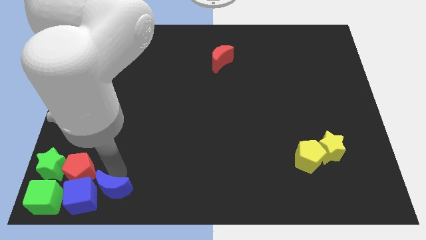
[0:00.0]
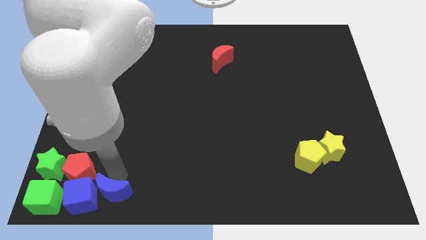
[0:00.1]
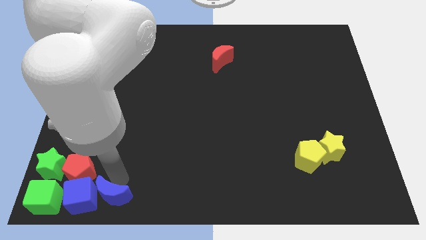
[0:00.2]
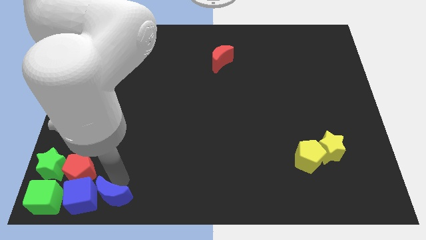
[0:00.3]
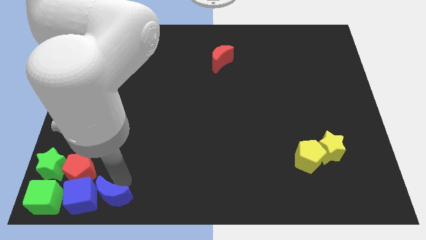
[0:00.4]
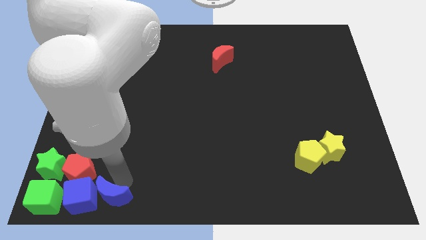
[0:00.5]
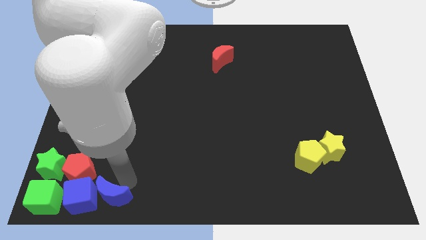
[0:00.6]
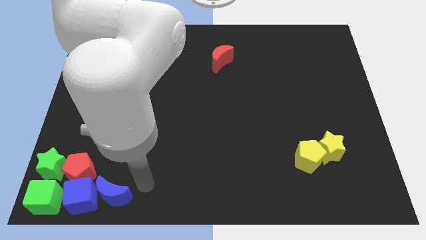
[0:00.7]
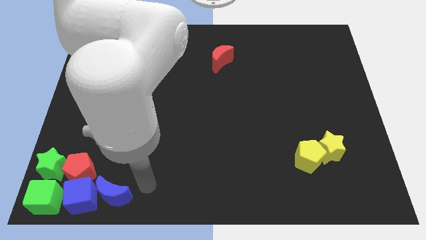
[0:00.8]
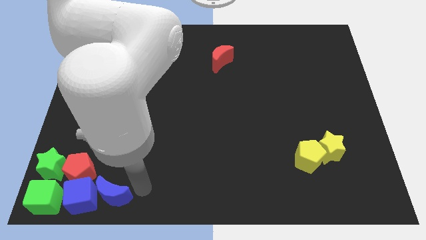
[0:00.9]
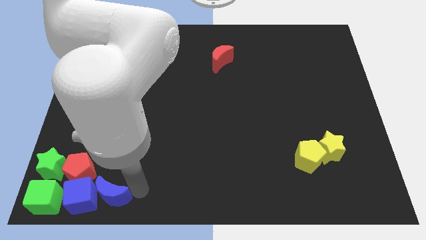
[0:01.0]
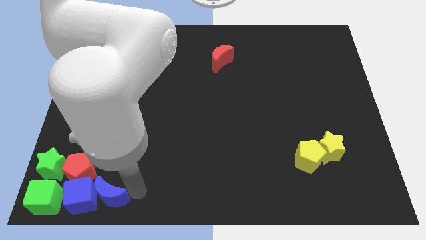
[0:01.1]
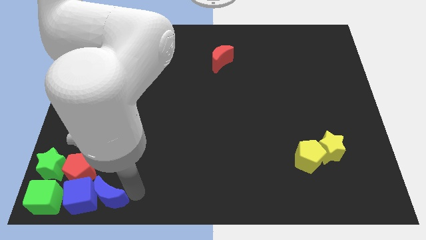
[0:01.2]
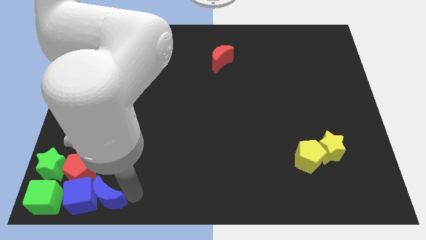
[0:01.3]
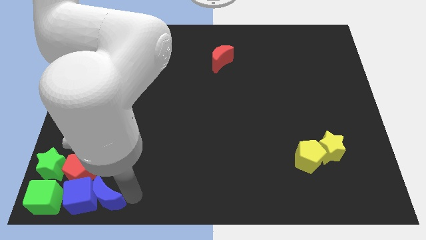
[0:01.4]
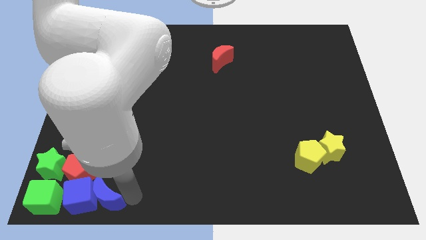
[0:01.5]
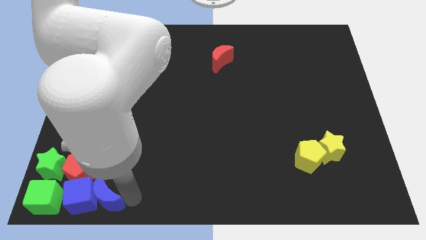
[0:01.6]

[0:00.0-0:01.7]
move the blue crescent to the right side of the blue cube

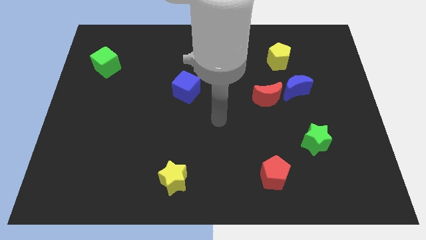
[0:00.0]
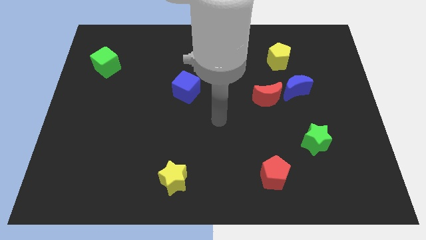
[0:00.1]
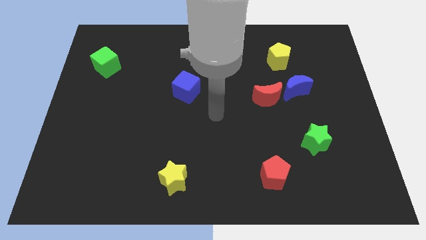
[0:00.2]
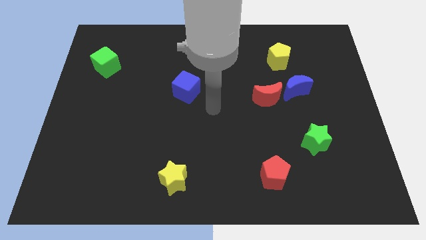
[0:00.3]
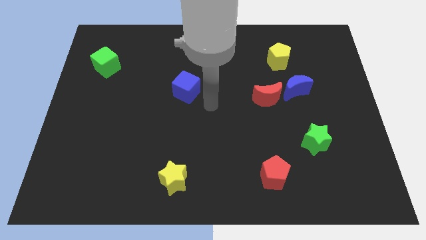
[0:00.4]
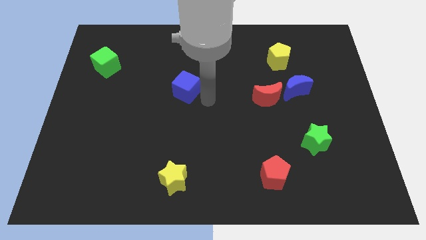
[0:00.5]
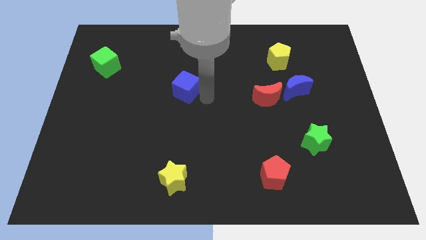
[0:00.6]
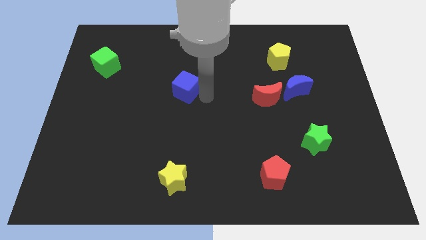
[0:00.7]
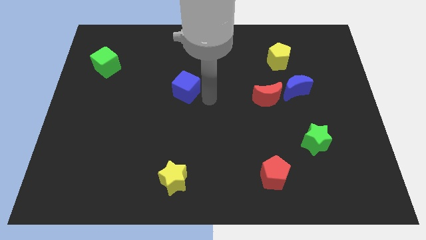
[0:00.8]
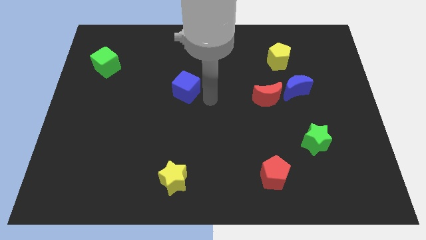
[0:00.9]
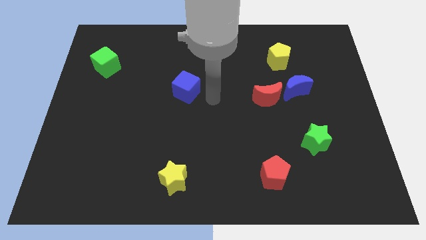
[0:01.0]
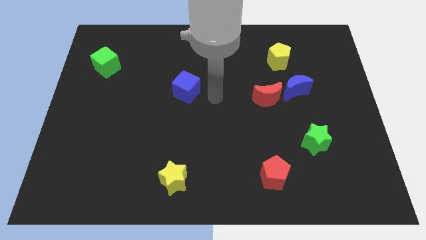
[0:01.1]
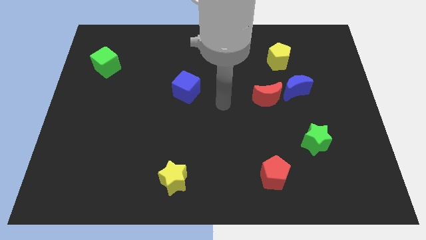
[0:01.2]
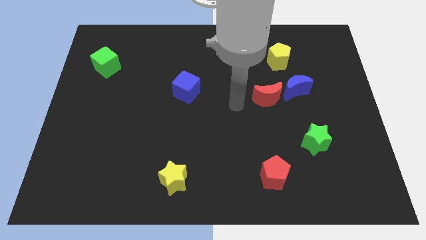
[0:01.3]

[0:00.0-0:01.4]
place your arm to the left side of the red moon

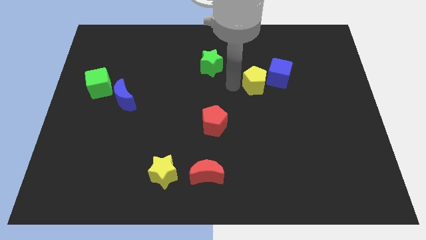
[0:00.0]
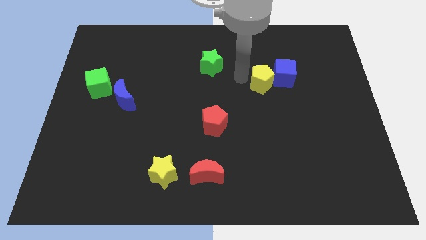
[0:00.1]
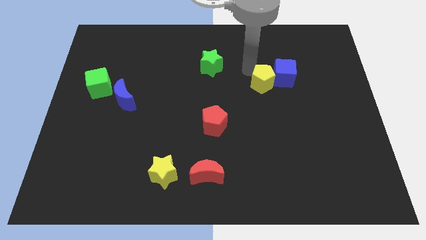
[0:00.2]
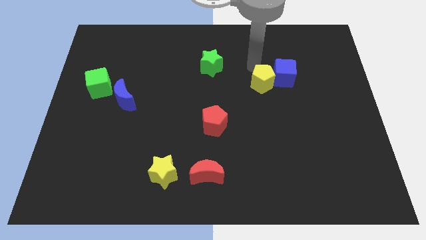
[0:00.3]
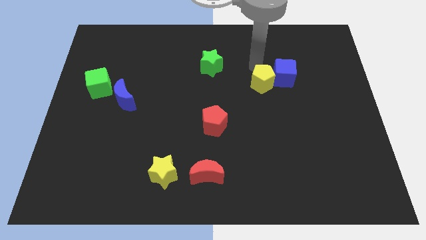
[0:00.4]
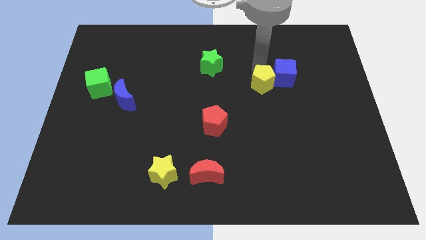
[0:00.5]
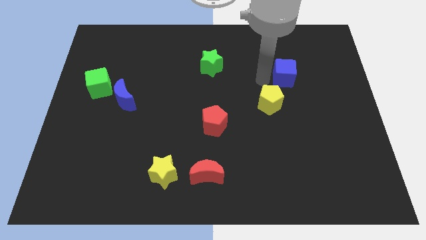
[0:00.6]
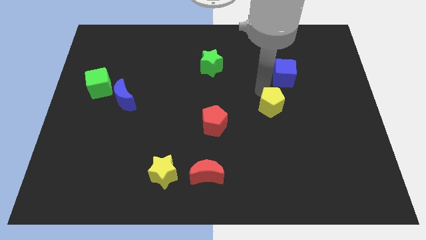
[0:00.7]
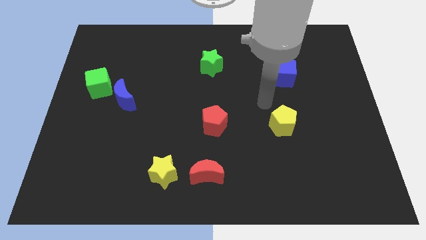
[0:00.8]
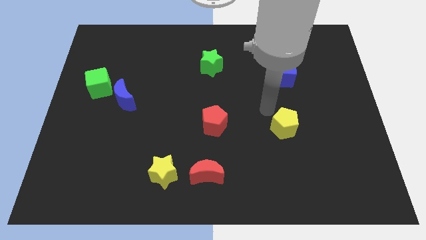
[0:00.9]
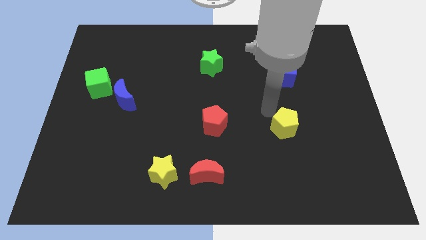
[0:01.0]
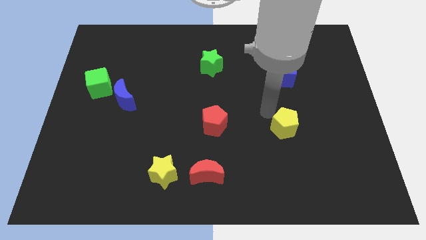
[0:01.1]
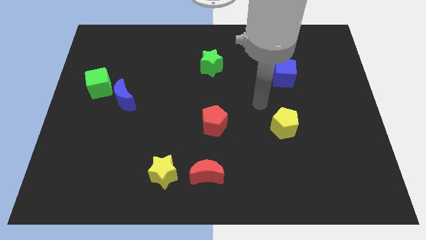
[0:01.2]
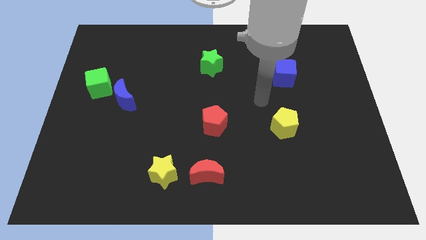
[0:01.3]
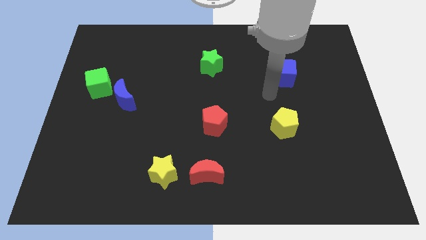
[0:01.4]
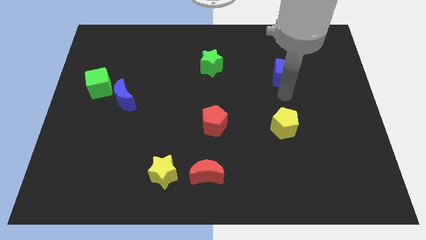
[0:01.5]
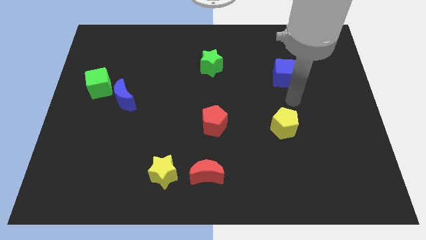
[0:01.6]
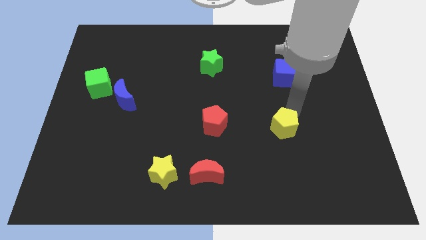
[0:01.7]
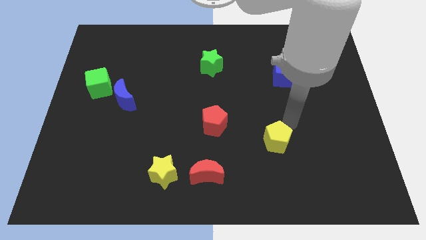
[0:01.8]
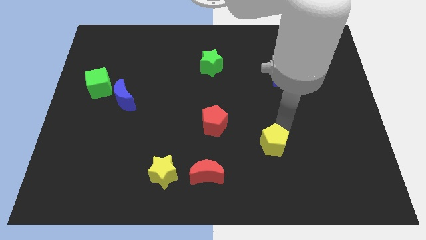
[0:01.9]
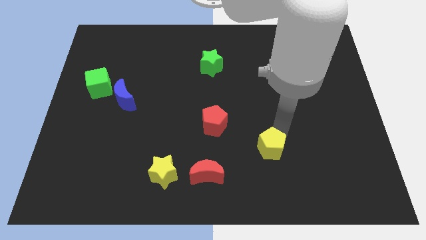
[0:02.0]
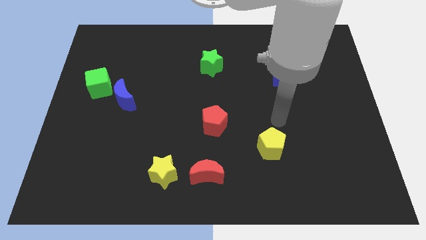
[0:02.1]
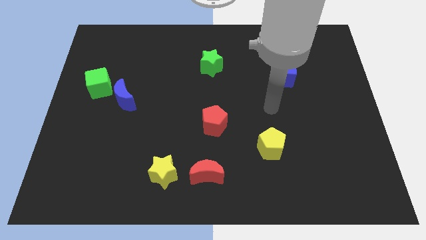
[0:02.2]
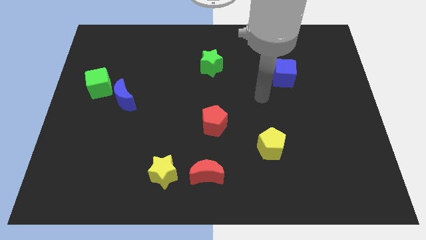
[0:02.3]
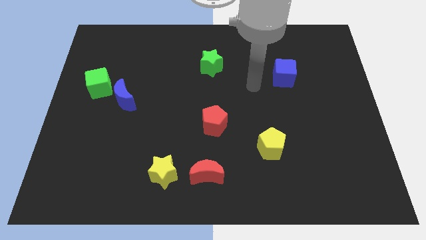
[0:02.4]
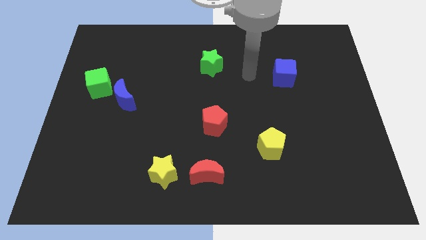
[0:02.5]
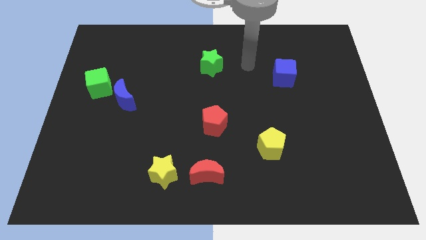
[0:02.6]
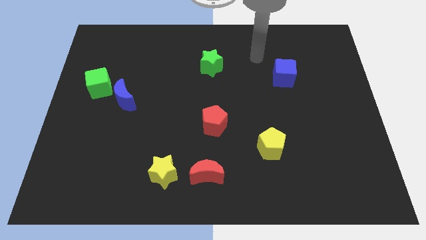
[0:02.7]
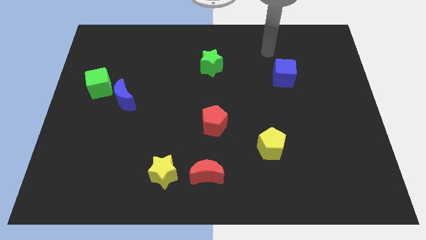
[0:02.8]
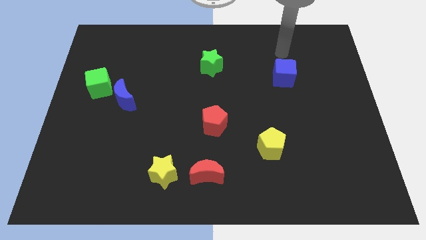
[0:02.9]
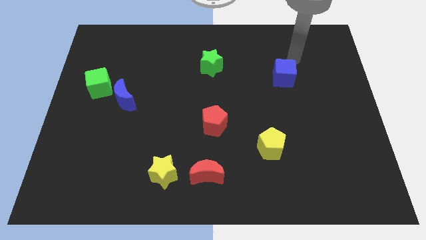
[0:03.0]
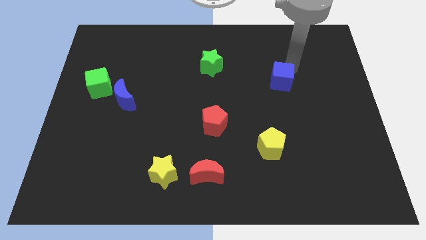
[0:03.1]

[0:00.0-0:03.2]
move the yellow pentagon towards bottom side of the board

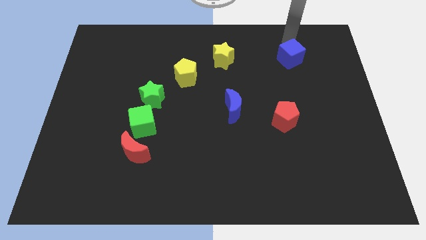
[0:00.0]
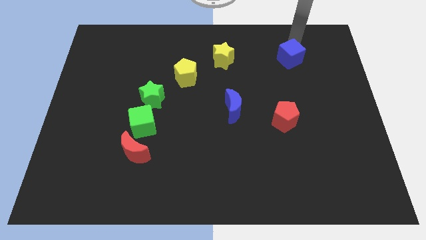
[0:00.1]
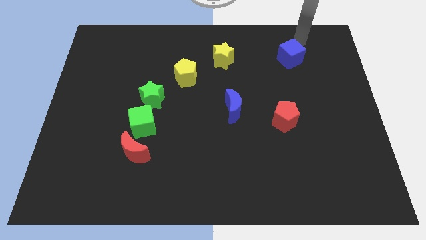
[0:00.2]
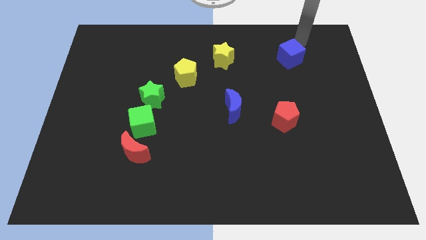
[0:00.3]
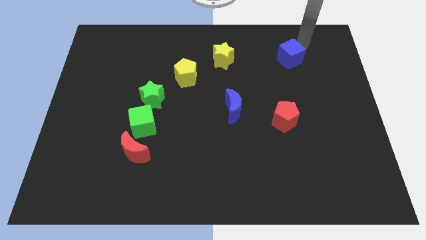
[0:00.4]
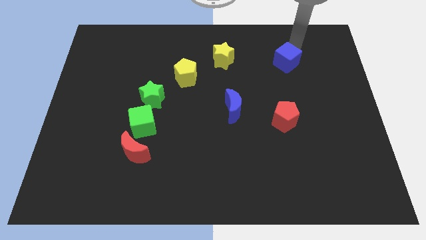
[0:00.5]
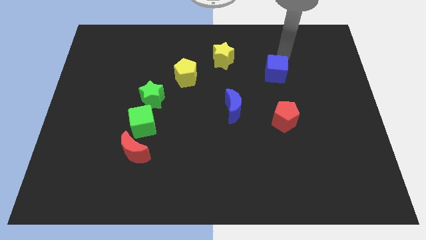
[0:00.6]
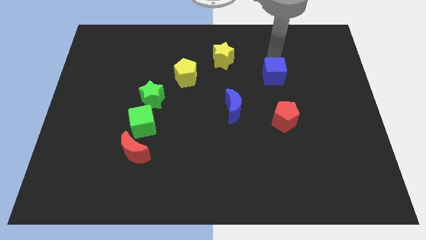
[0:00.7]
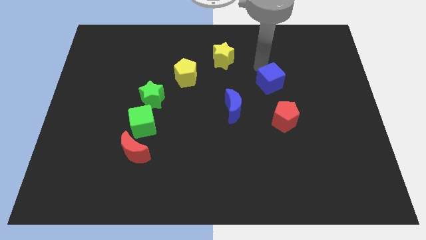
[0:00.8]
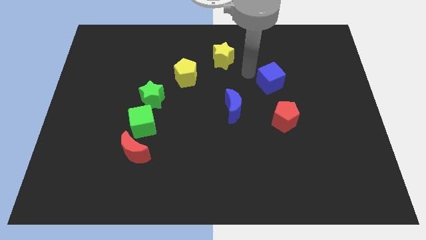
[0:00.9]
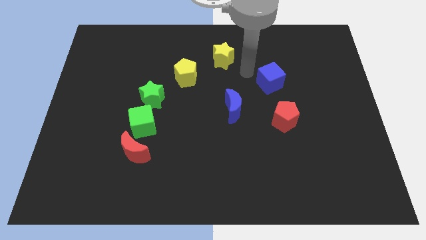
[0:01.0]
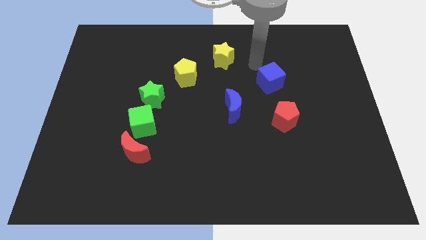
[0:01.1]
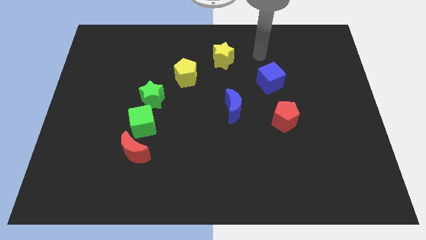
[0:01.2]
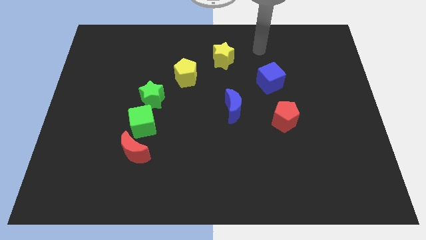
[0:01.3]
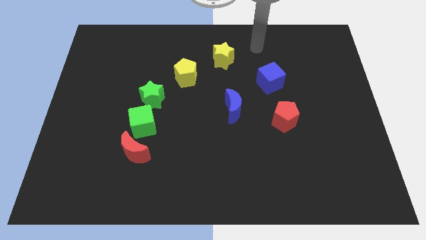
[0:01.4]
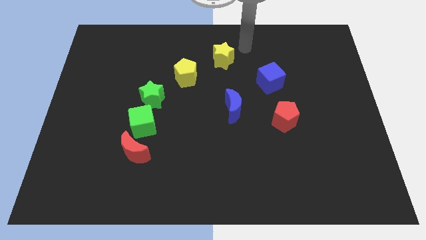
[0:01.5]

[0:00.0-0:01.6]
move the blue cube slightly to the bottom

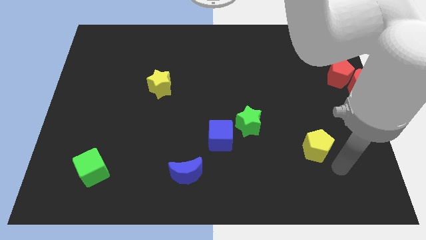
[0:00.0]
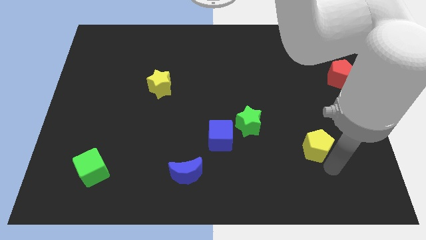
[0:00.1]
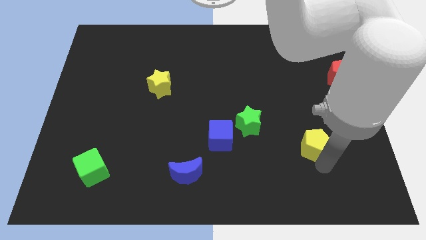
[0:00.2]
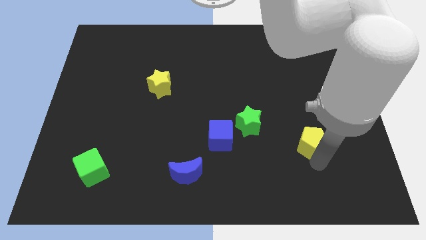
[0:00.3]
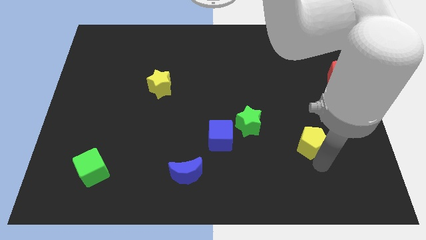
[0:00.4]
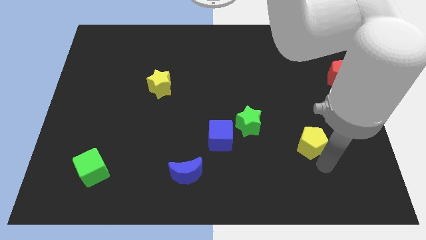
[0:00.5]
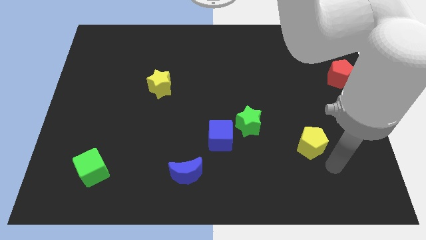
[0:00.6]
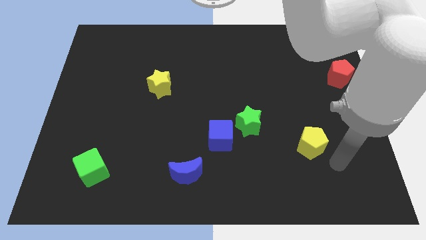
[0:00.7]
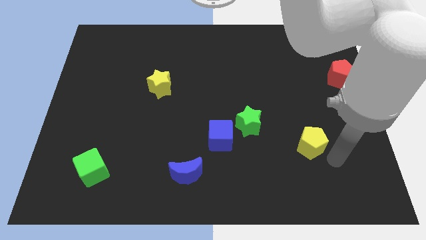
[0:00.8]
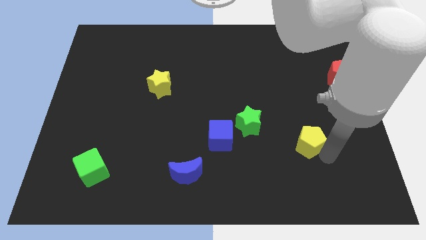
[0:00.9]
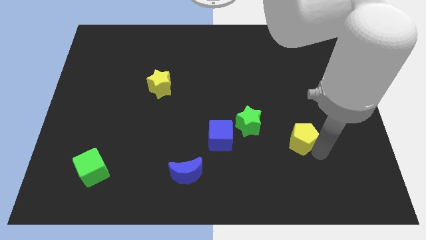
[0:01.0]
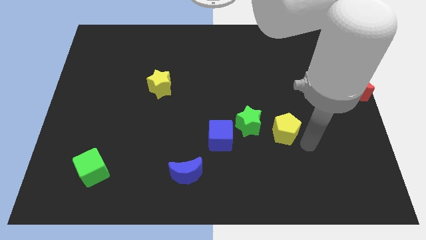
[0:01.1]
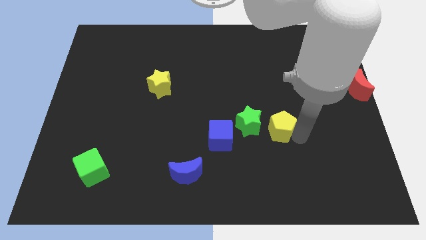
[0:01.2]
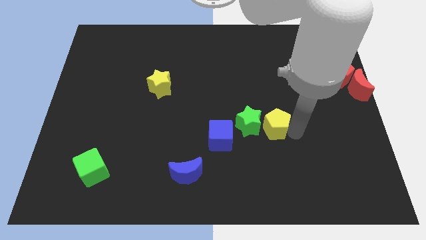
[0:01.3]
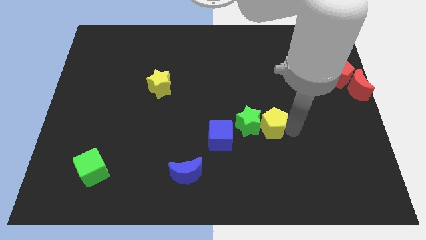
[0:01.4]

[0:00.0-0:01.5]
push the yellow pentagon to the right of the green star
